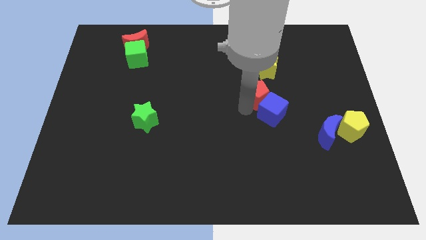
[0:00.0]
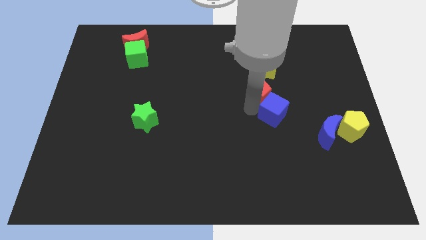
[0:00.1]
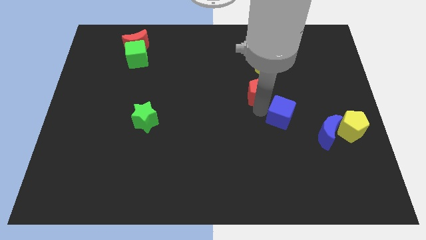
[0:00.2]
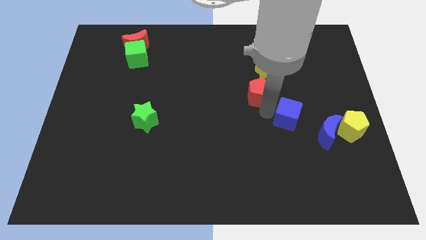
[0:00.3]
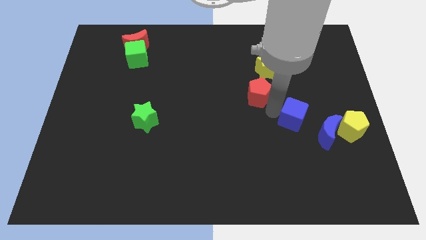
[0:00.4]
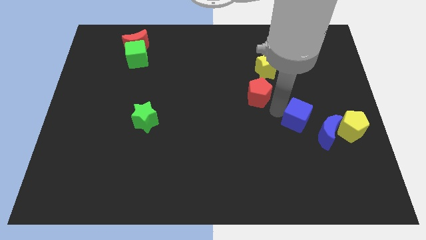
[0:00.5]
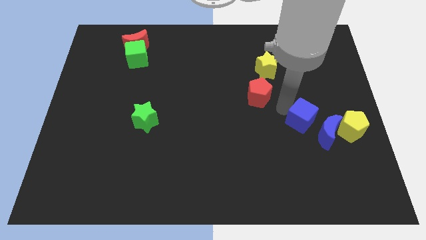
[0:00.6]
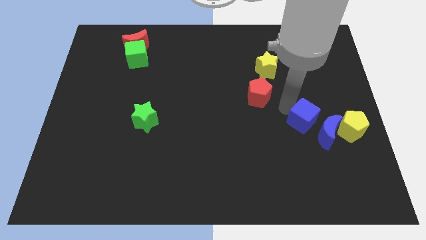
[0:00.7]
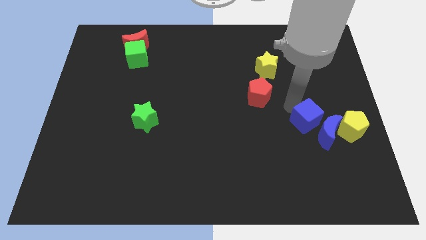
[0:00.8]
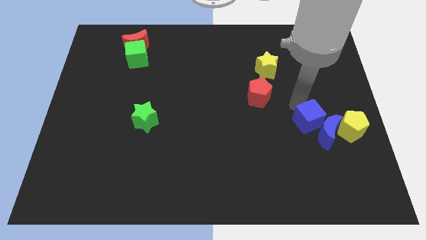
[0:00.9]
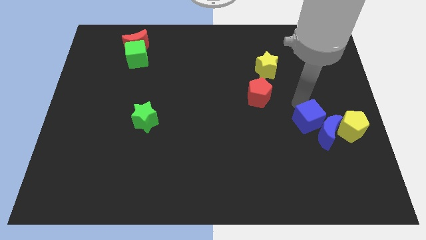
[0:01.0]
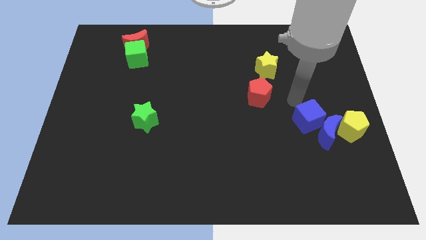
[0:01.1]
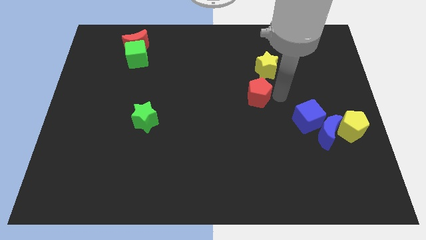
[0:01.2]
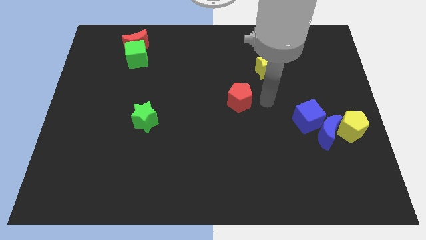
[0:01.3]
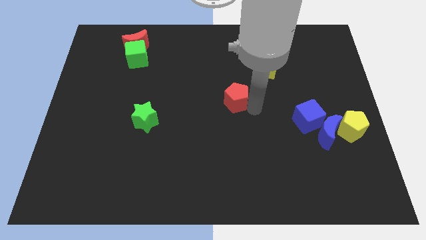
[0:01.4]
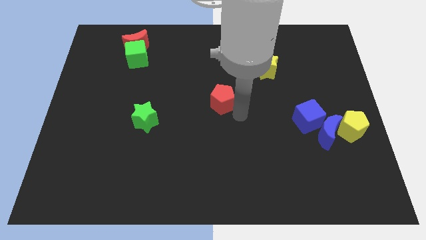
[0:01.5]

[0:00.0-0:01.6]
separate red pentagon and blue cube

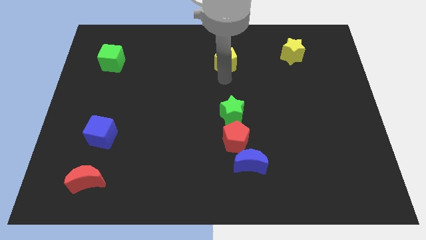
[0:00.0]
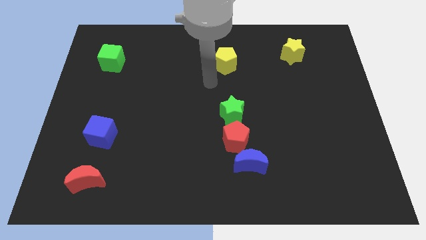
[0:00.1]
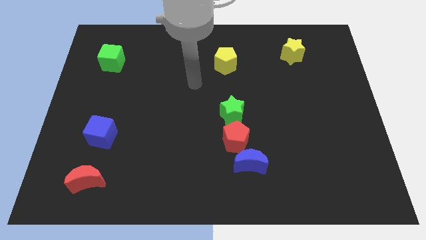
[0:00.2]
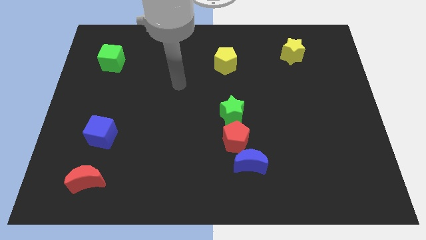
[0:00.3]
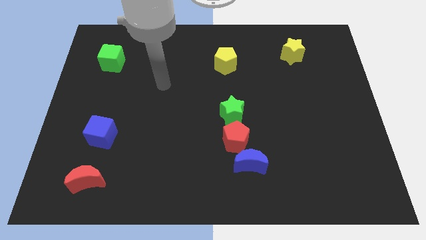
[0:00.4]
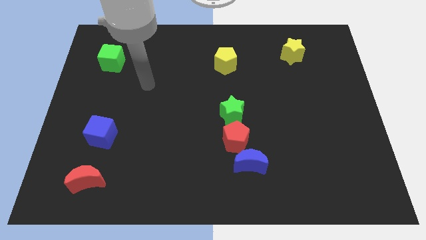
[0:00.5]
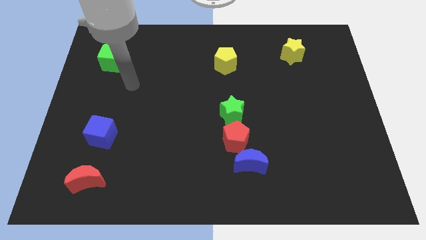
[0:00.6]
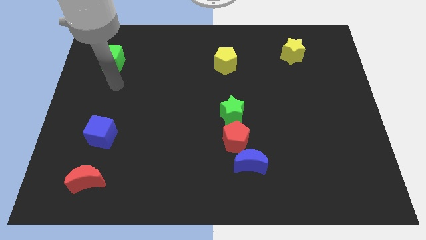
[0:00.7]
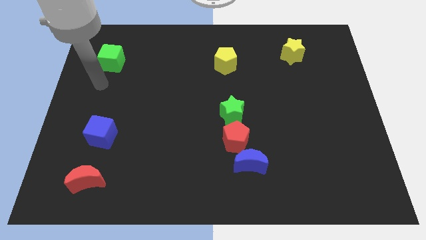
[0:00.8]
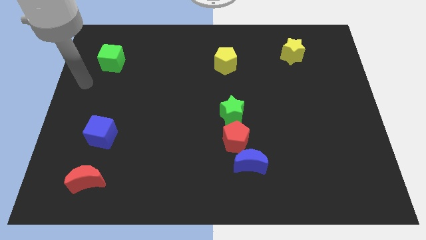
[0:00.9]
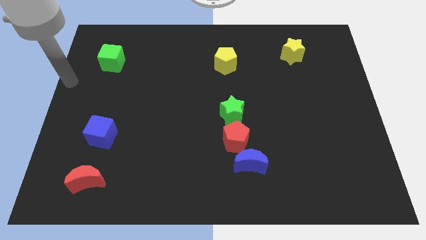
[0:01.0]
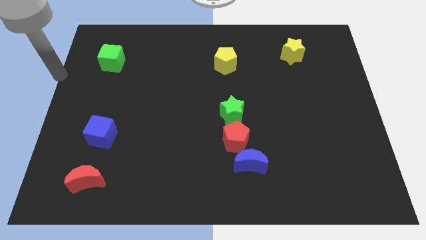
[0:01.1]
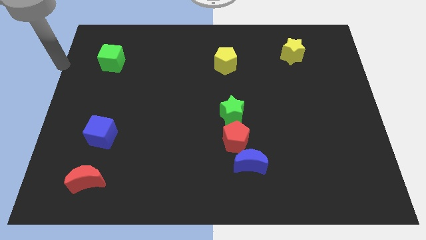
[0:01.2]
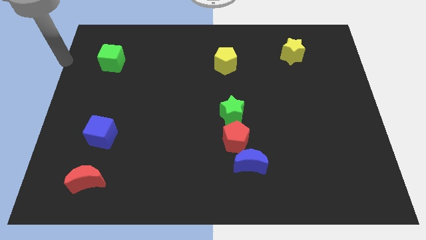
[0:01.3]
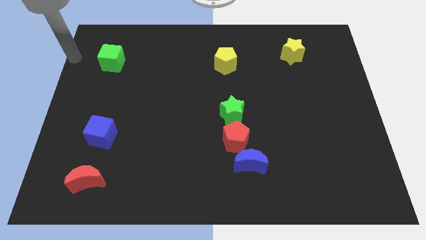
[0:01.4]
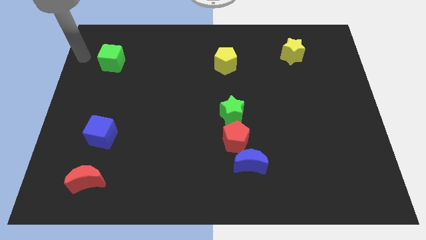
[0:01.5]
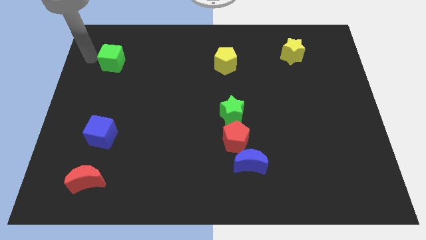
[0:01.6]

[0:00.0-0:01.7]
move your arm to the left of the green cube

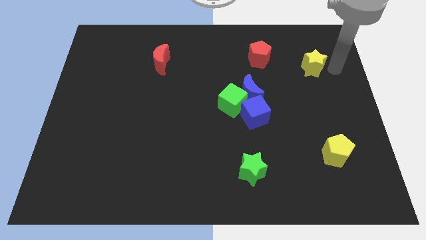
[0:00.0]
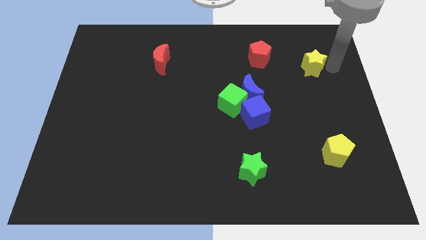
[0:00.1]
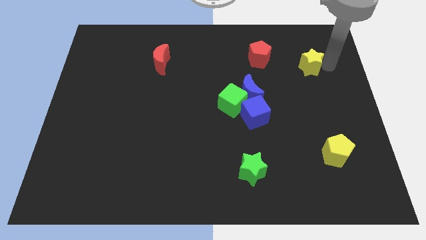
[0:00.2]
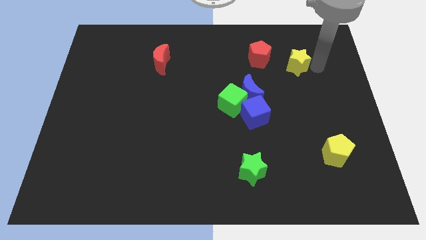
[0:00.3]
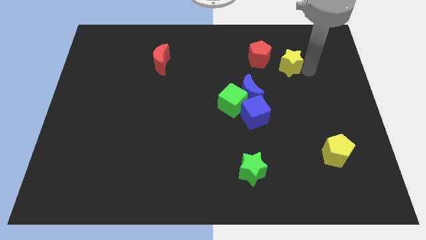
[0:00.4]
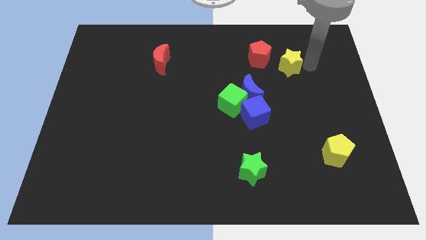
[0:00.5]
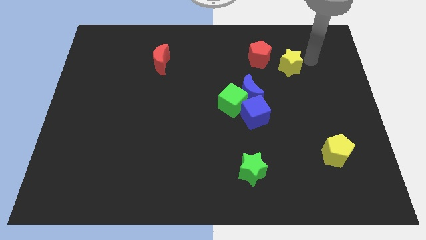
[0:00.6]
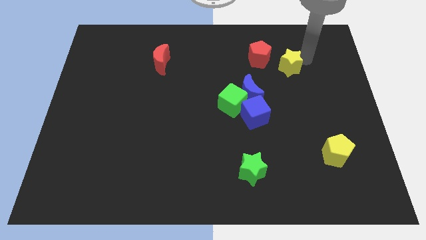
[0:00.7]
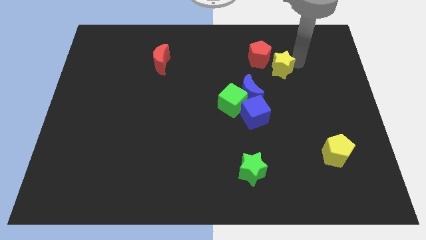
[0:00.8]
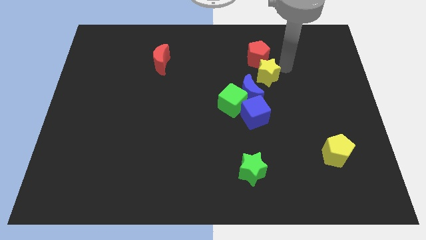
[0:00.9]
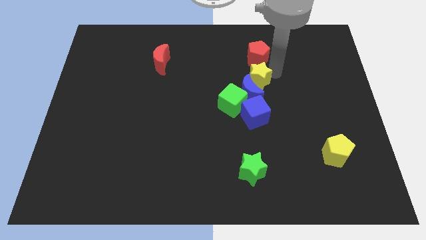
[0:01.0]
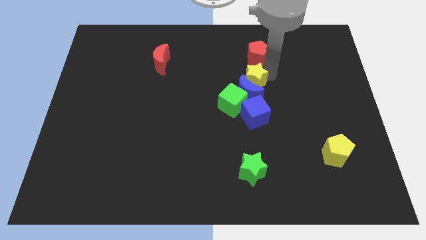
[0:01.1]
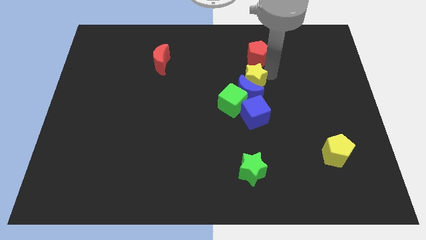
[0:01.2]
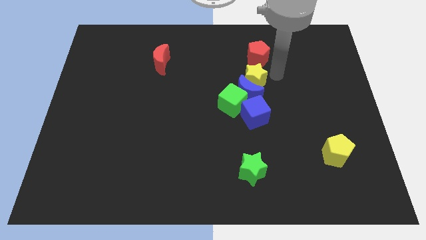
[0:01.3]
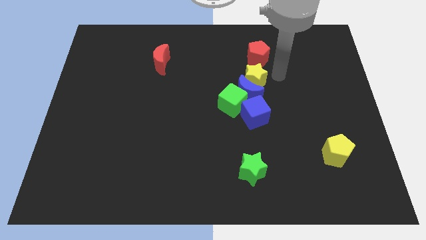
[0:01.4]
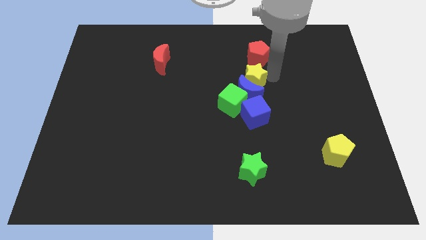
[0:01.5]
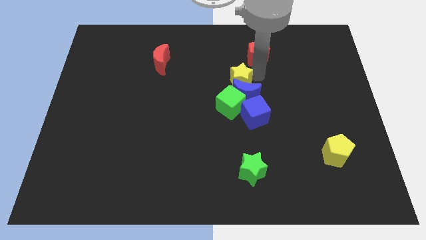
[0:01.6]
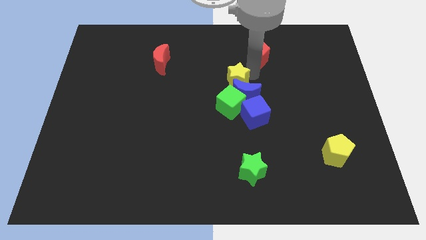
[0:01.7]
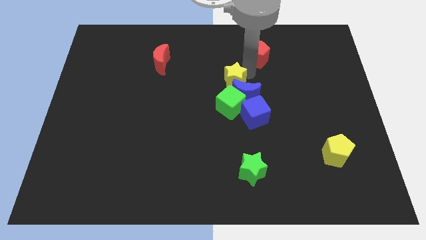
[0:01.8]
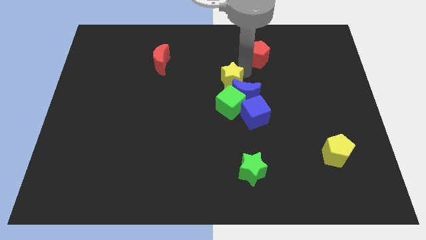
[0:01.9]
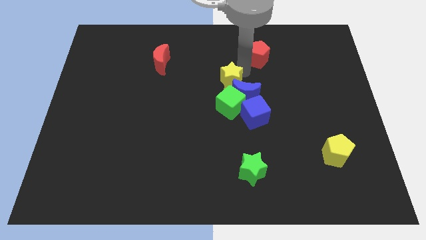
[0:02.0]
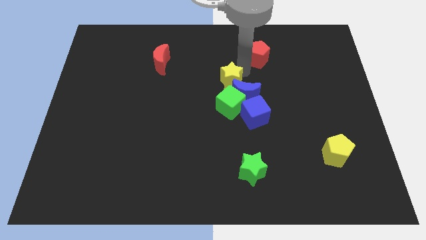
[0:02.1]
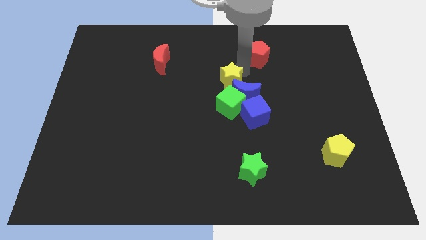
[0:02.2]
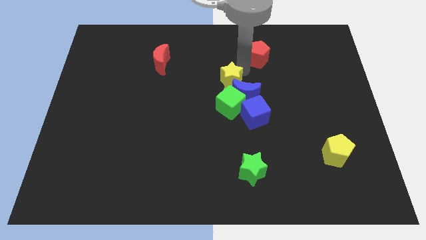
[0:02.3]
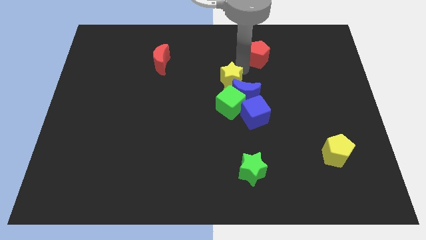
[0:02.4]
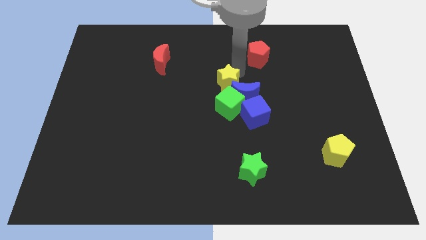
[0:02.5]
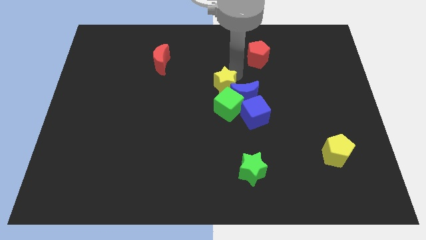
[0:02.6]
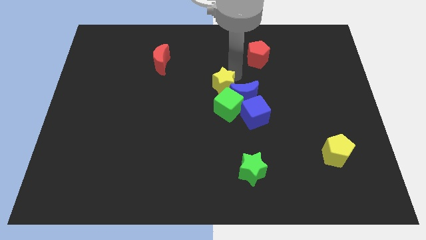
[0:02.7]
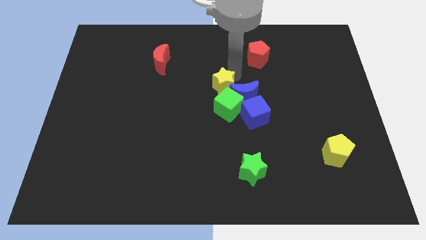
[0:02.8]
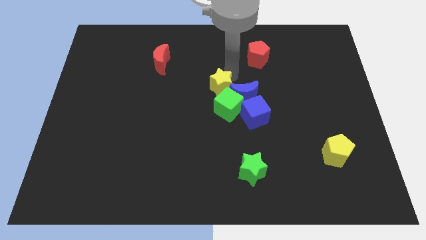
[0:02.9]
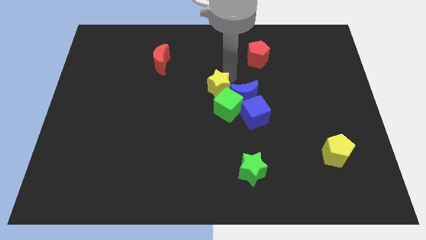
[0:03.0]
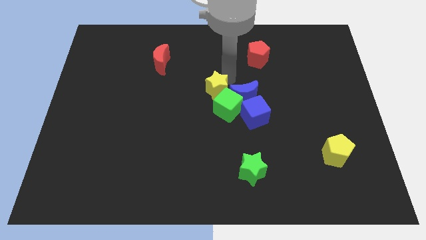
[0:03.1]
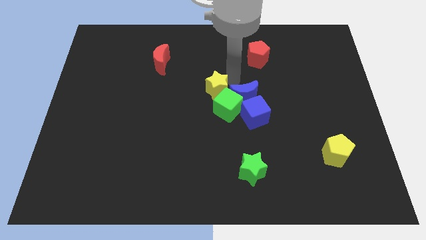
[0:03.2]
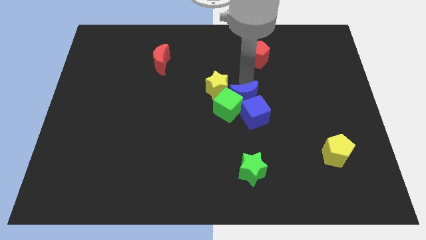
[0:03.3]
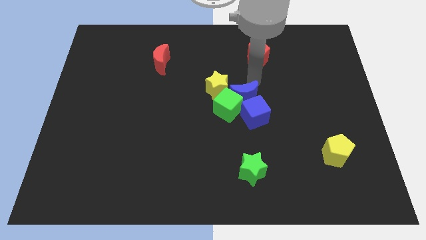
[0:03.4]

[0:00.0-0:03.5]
move the yellow star to the center of the board

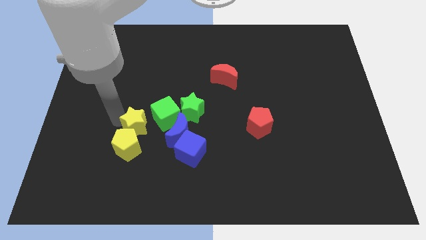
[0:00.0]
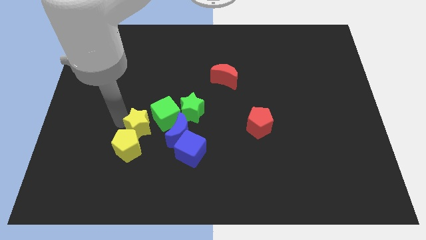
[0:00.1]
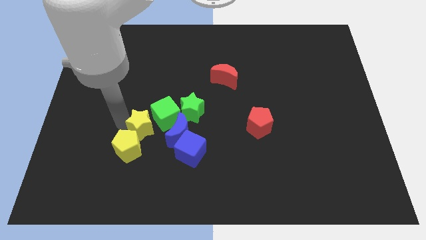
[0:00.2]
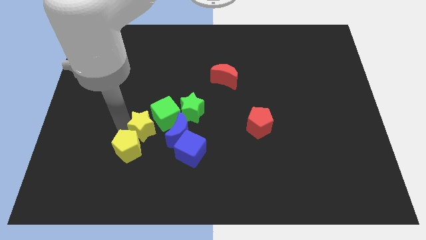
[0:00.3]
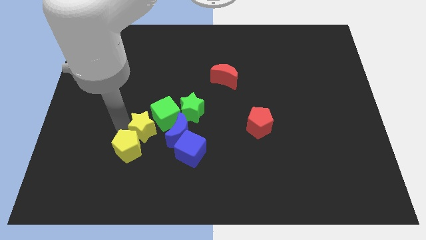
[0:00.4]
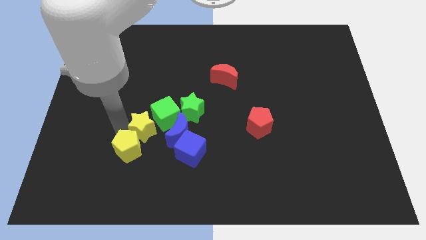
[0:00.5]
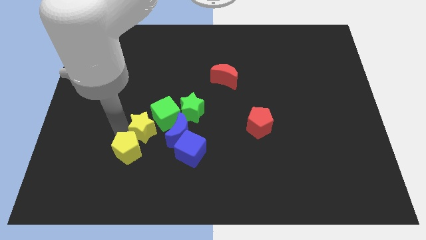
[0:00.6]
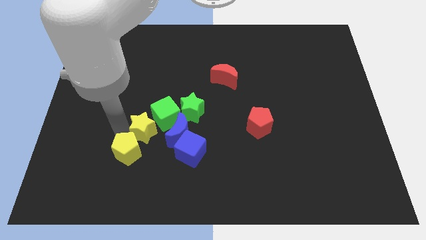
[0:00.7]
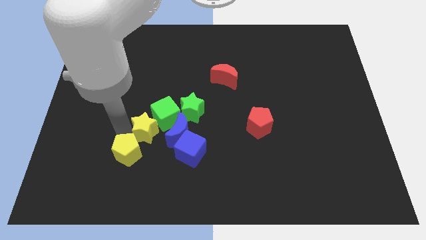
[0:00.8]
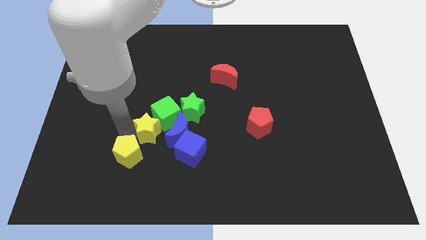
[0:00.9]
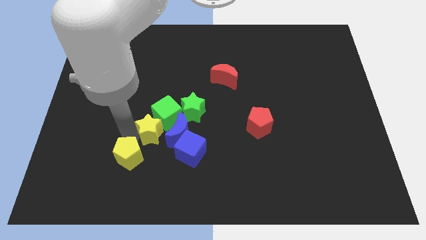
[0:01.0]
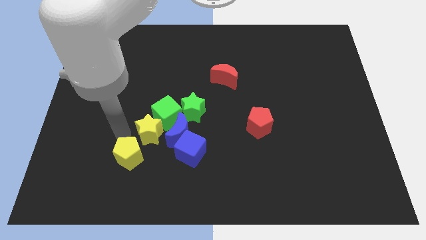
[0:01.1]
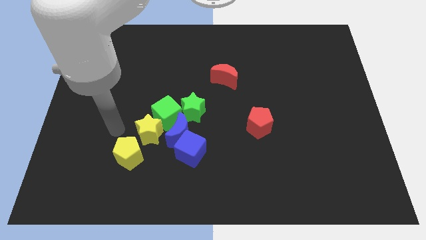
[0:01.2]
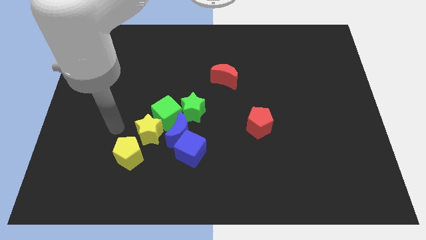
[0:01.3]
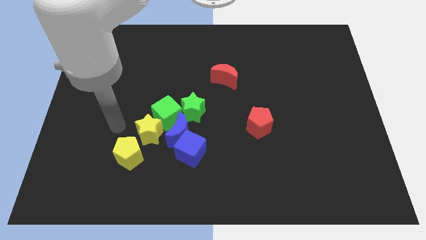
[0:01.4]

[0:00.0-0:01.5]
slide the yellow star towards the group of blocks

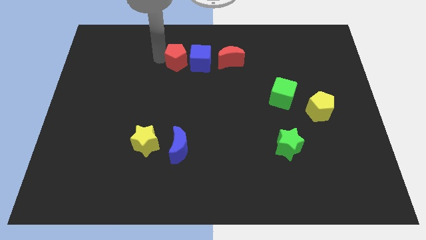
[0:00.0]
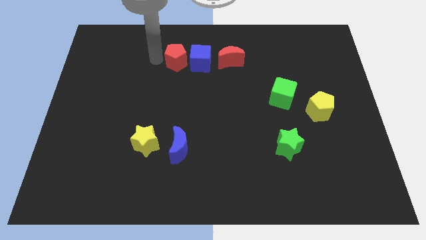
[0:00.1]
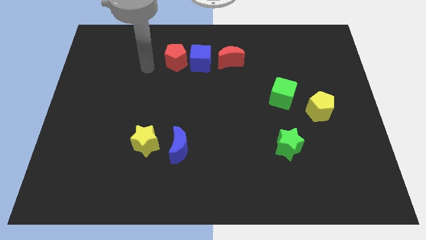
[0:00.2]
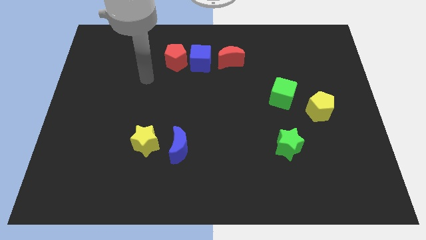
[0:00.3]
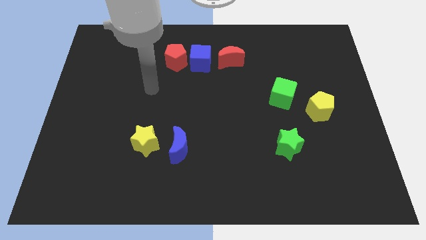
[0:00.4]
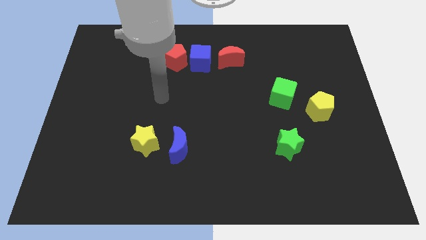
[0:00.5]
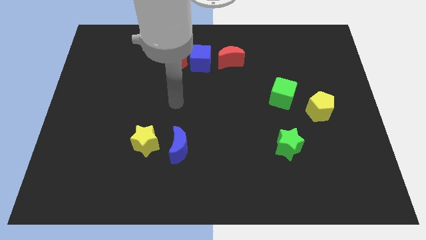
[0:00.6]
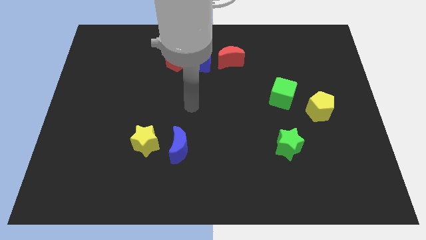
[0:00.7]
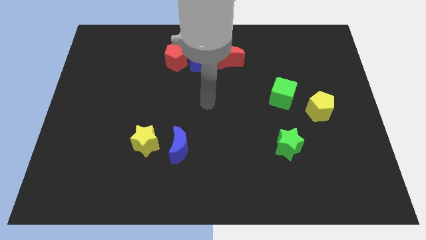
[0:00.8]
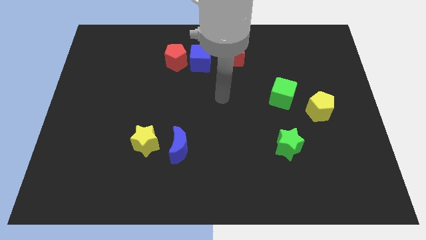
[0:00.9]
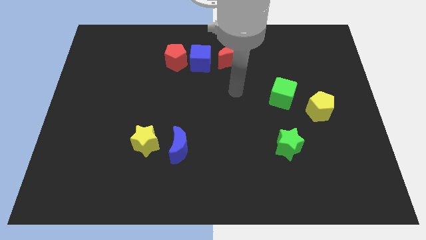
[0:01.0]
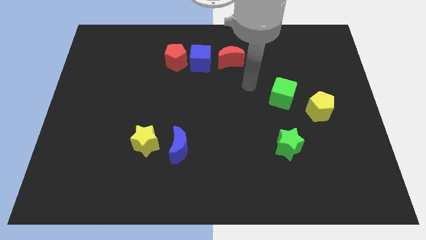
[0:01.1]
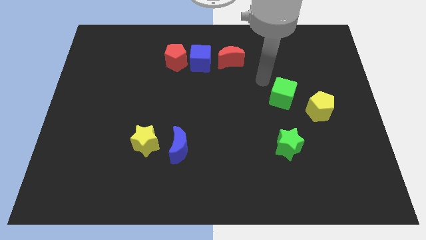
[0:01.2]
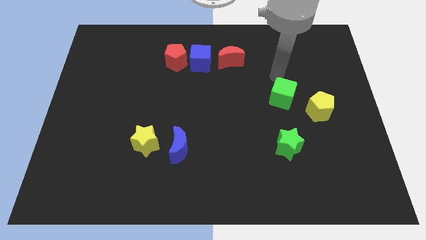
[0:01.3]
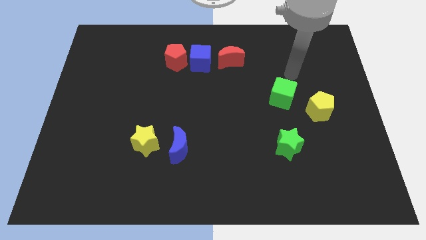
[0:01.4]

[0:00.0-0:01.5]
move to the top side of the green cube
